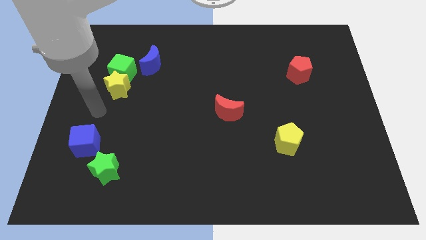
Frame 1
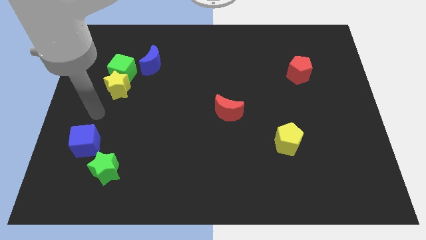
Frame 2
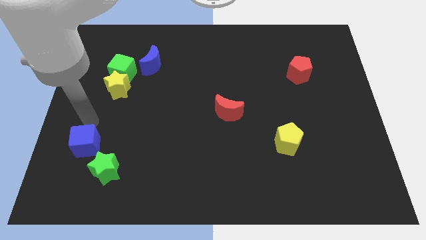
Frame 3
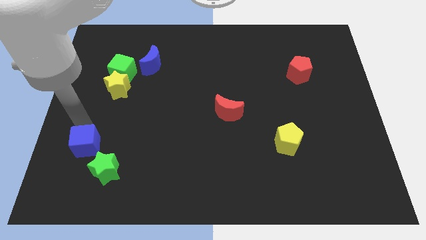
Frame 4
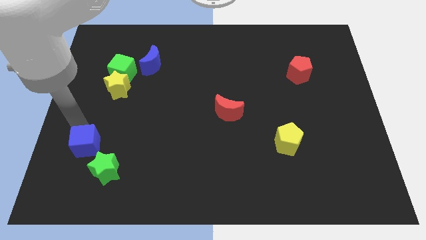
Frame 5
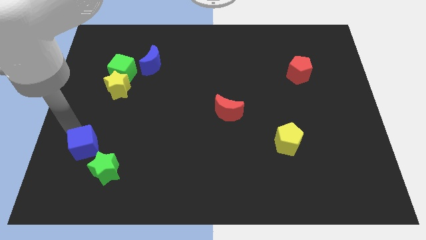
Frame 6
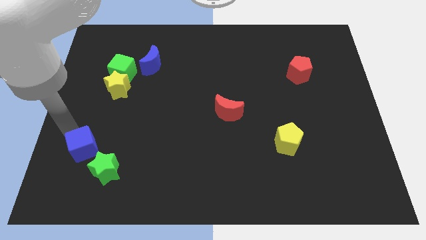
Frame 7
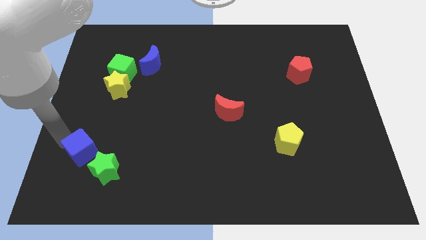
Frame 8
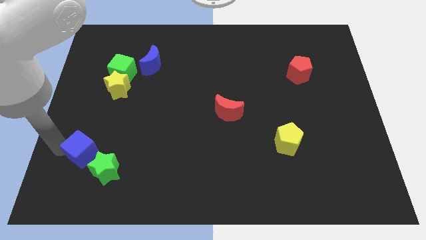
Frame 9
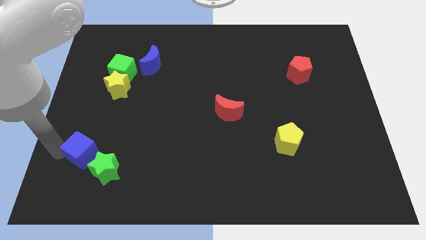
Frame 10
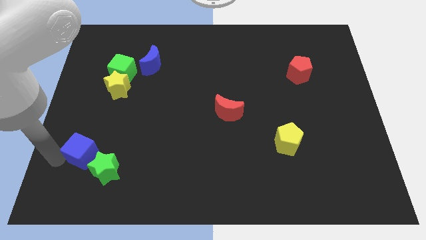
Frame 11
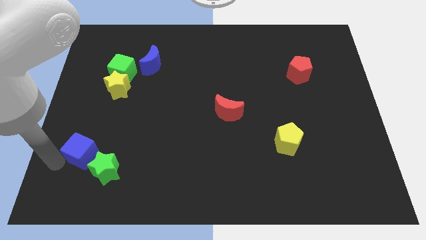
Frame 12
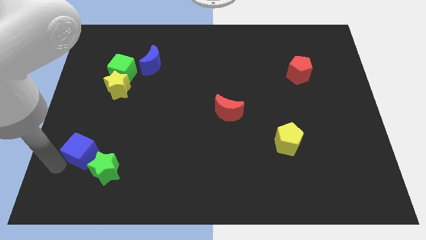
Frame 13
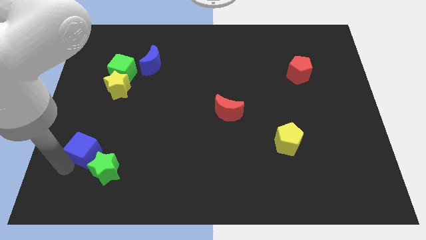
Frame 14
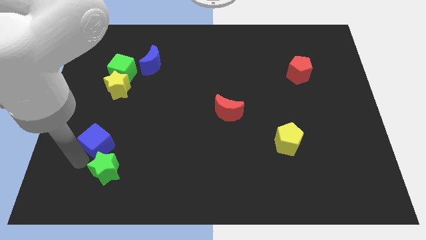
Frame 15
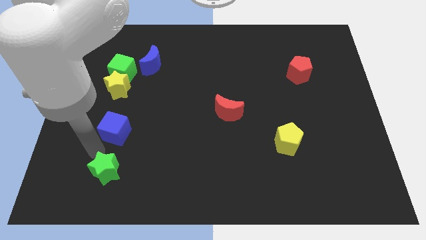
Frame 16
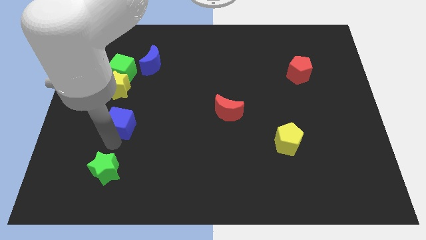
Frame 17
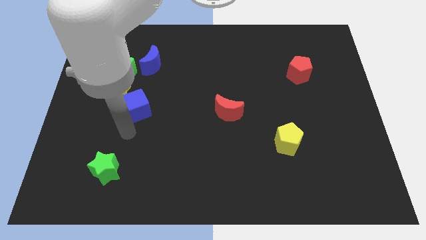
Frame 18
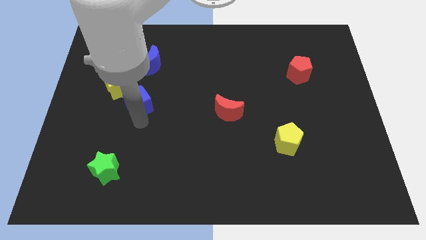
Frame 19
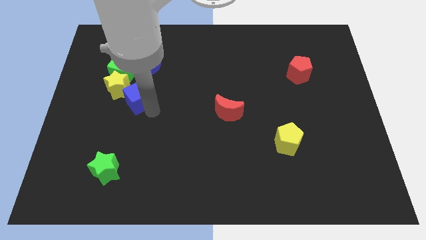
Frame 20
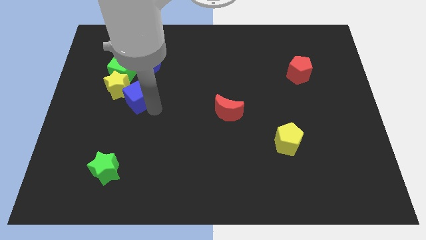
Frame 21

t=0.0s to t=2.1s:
place the blue cube close to the yellow star

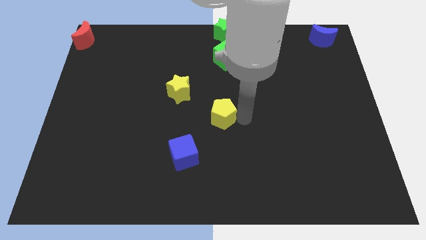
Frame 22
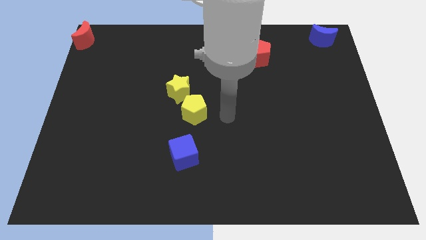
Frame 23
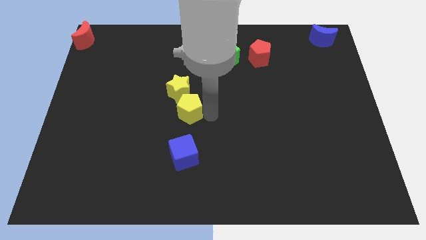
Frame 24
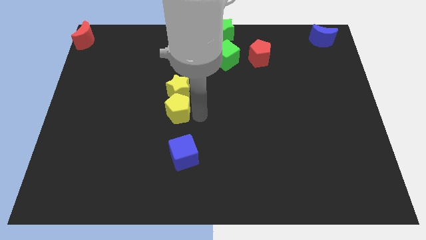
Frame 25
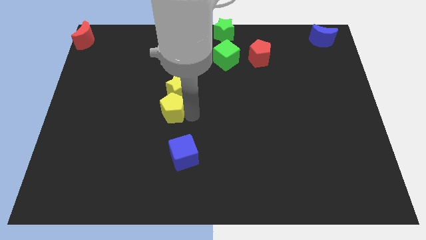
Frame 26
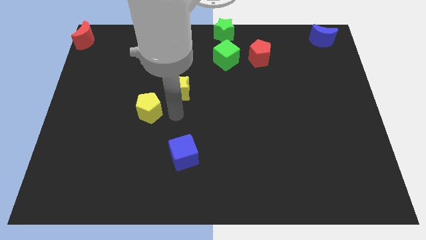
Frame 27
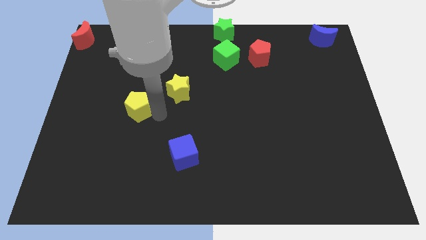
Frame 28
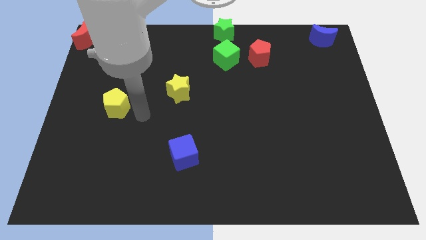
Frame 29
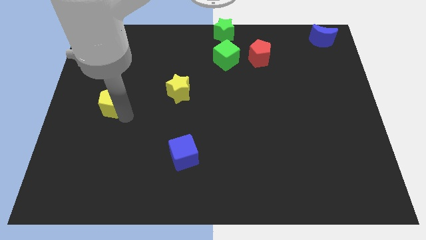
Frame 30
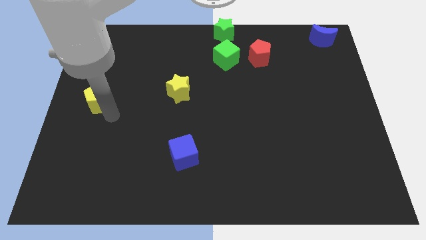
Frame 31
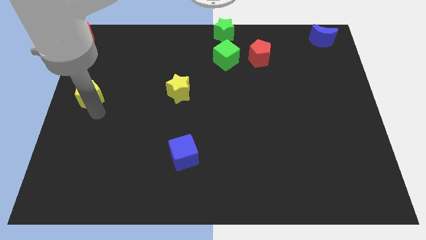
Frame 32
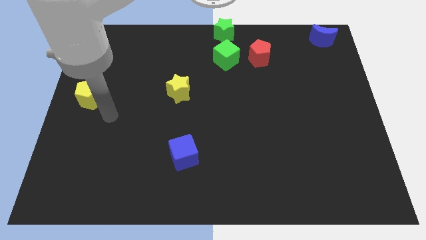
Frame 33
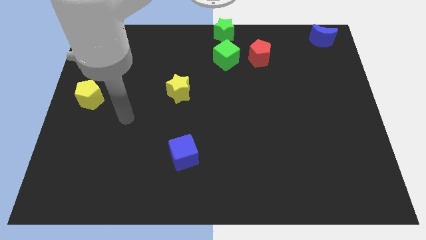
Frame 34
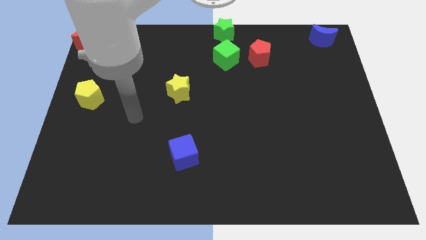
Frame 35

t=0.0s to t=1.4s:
push the yellow pentagon towards the left side of the board

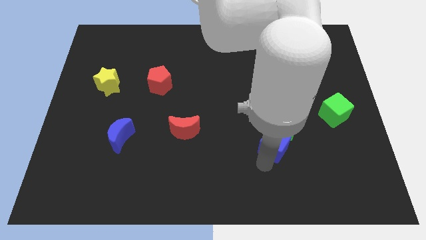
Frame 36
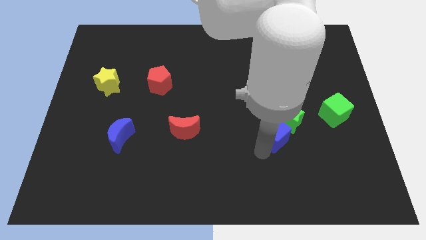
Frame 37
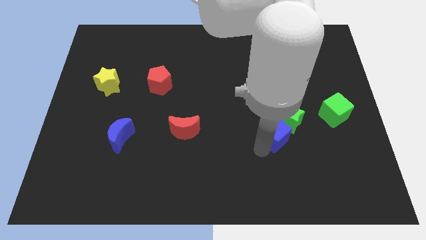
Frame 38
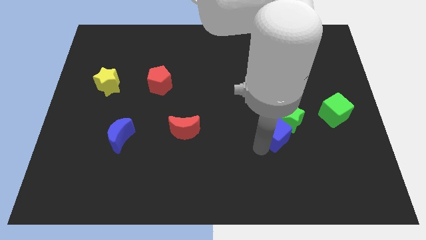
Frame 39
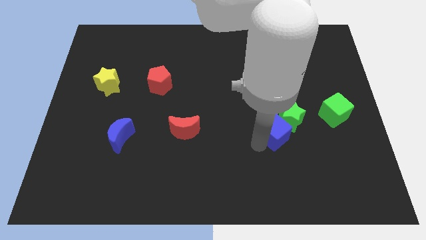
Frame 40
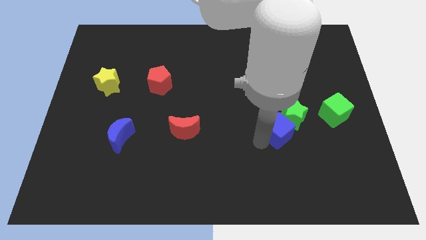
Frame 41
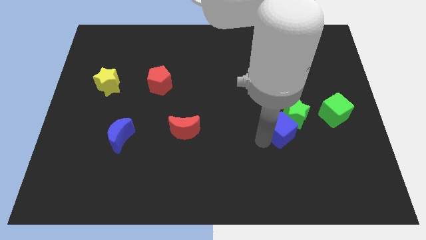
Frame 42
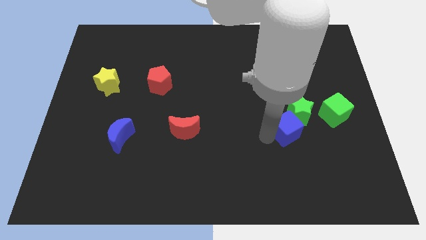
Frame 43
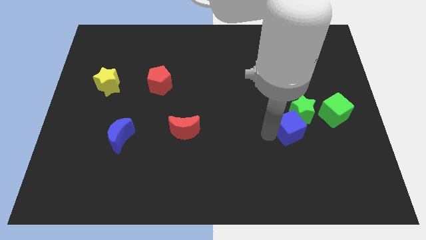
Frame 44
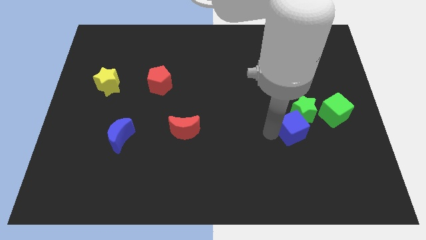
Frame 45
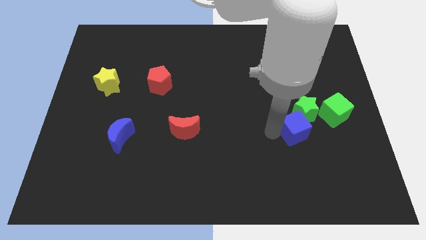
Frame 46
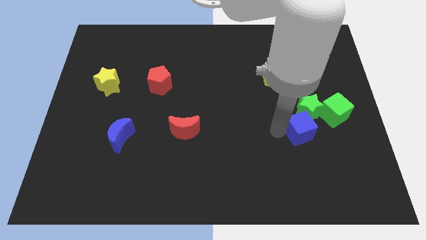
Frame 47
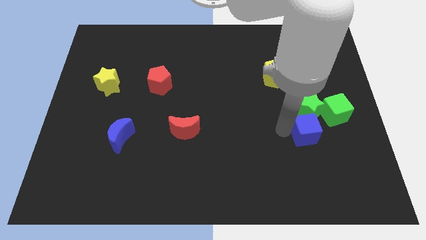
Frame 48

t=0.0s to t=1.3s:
move the green star and blue cube into the green cube

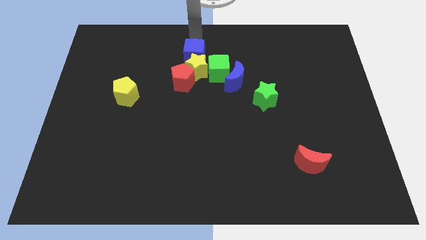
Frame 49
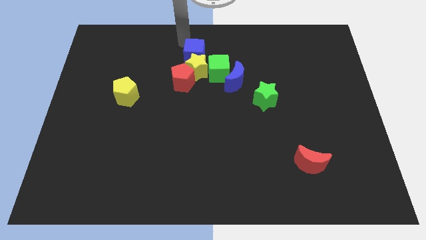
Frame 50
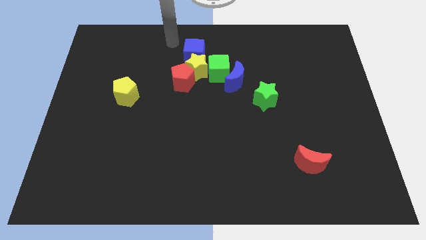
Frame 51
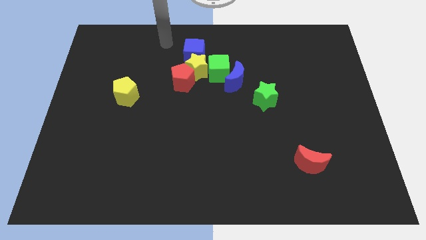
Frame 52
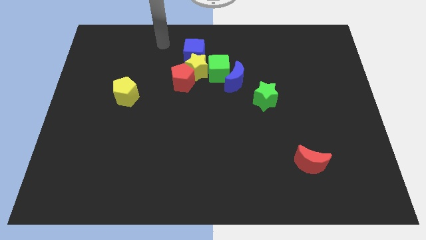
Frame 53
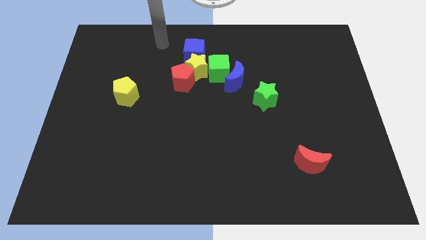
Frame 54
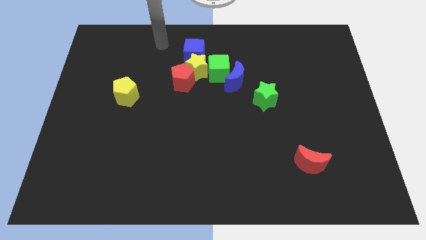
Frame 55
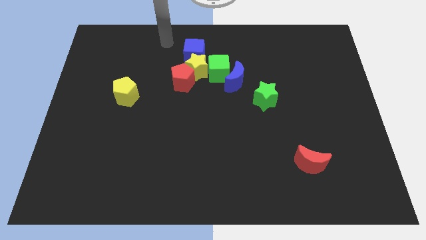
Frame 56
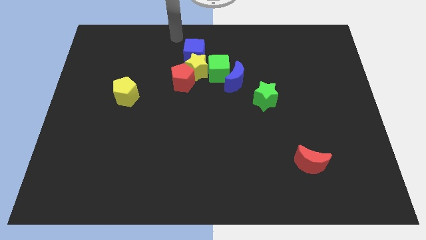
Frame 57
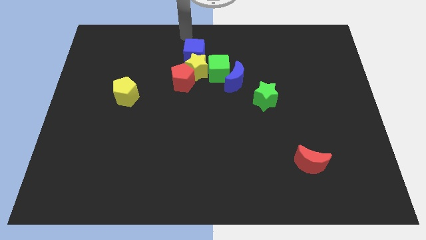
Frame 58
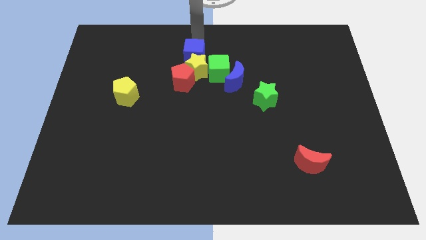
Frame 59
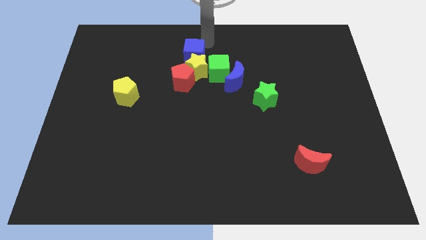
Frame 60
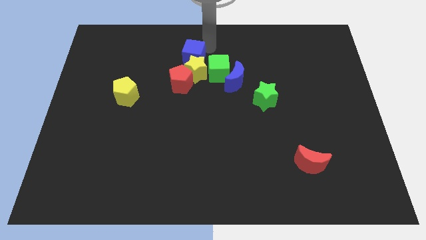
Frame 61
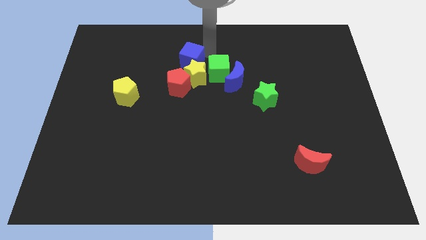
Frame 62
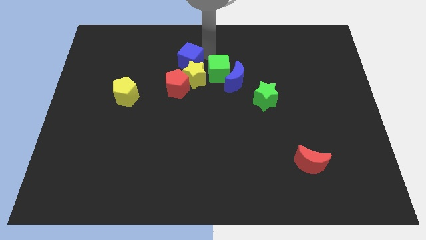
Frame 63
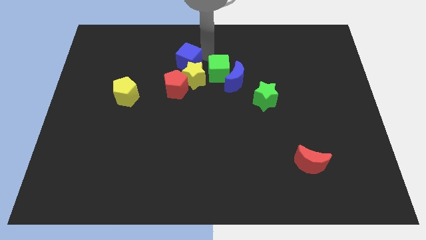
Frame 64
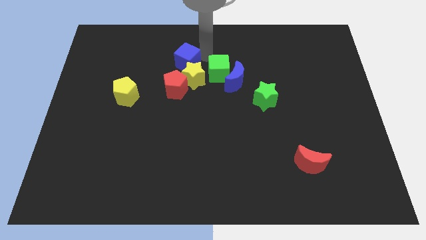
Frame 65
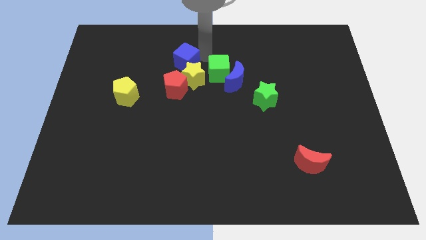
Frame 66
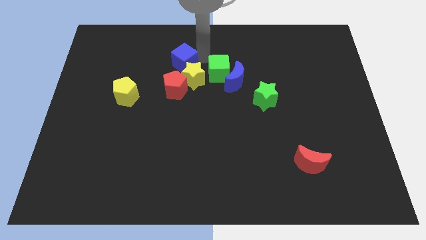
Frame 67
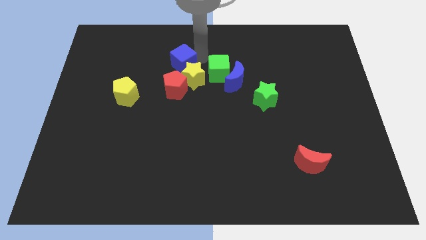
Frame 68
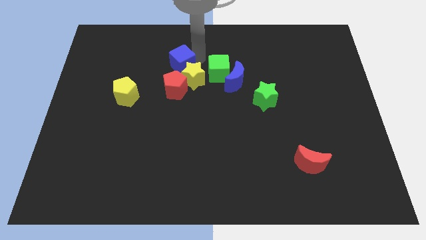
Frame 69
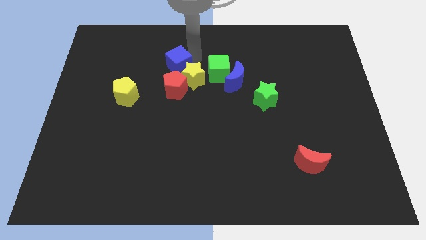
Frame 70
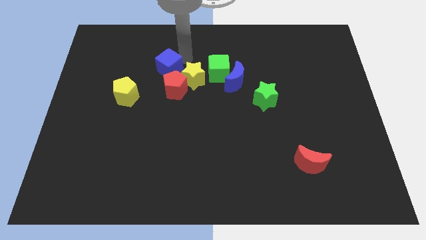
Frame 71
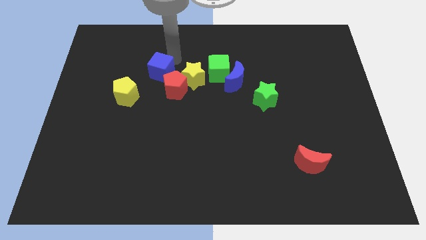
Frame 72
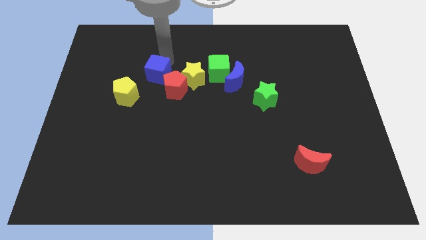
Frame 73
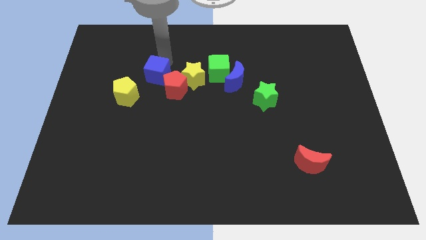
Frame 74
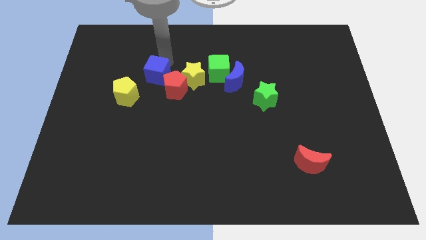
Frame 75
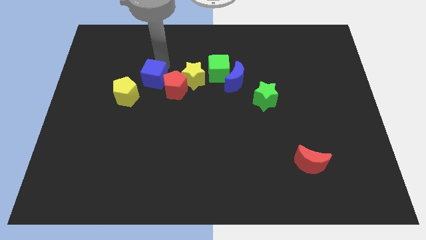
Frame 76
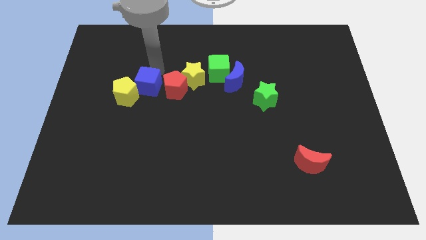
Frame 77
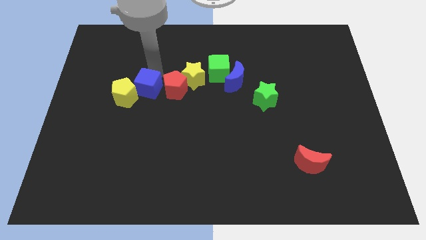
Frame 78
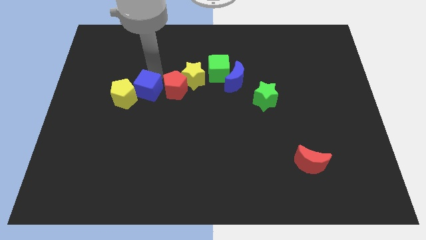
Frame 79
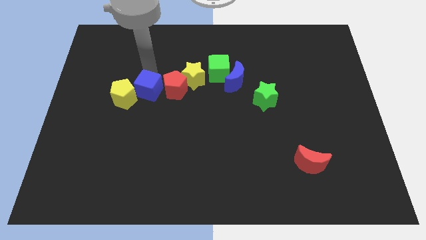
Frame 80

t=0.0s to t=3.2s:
slide the blue cube in between the red pentagon and yellow pentagon

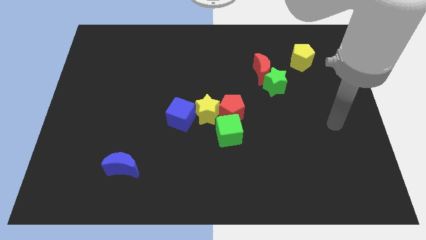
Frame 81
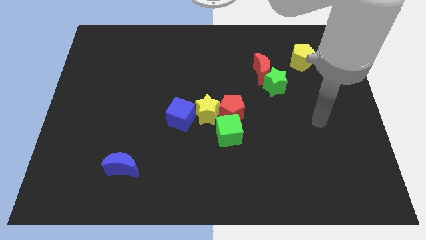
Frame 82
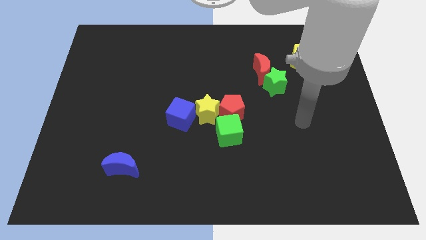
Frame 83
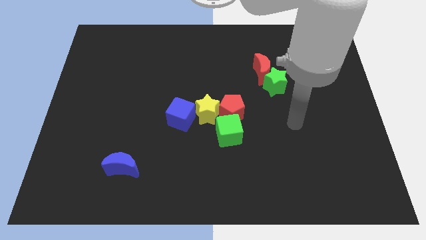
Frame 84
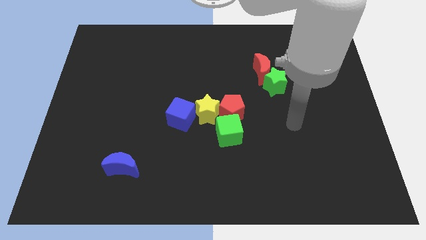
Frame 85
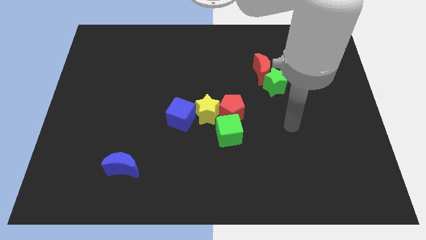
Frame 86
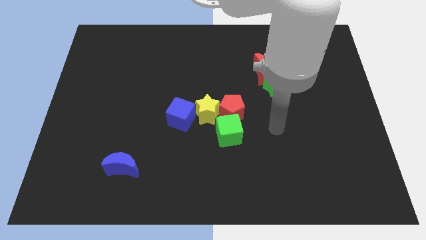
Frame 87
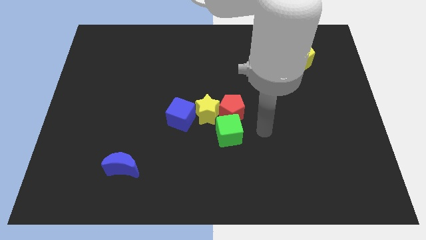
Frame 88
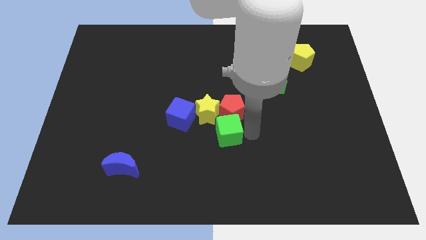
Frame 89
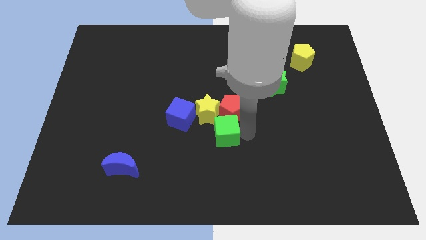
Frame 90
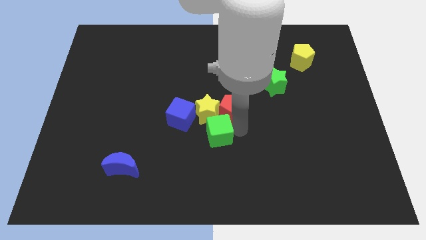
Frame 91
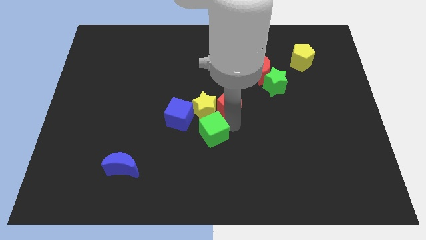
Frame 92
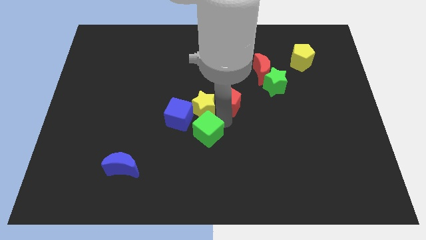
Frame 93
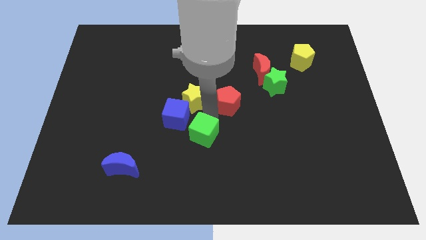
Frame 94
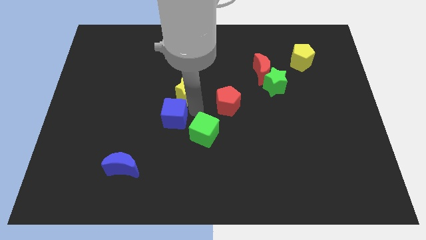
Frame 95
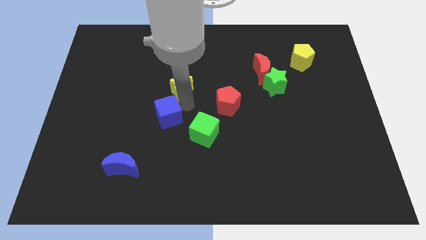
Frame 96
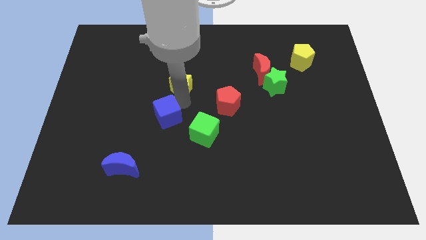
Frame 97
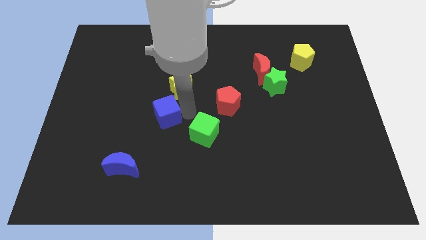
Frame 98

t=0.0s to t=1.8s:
separate the yellow star from the blue cube and the red pentagon
